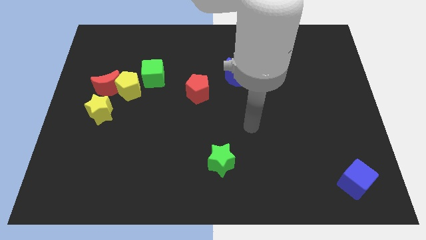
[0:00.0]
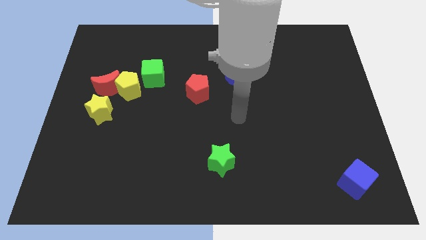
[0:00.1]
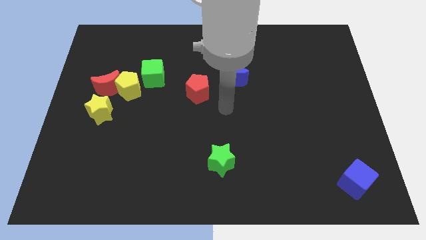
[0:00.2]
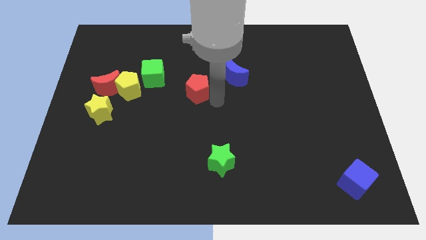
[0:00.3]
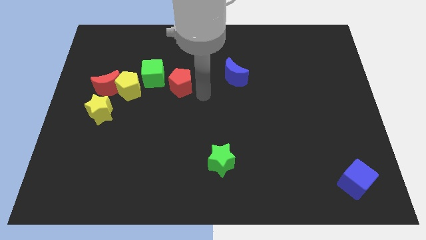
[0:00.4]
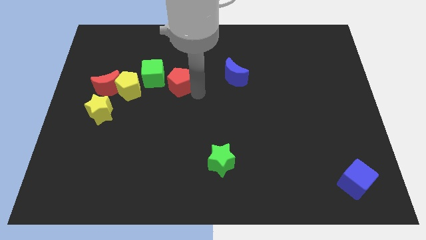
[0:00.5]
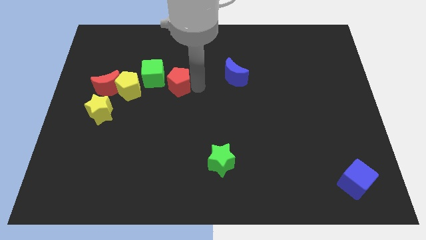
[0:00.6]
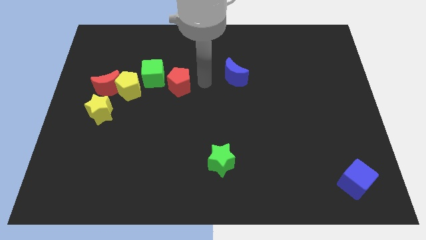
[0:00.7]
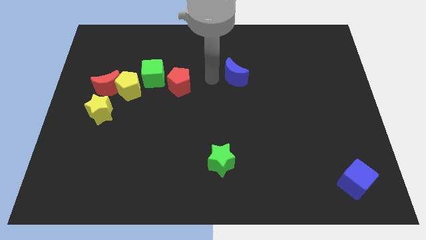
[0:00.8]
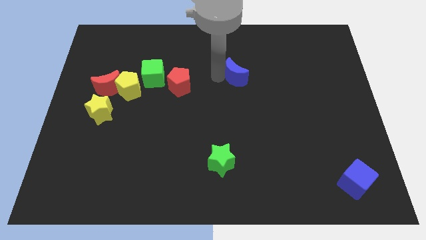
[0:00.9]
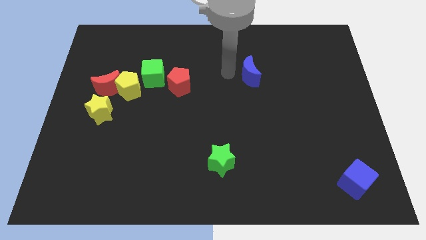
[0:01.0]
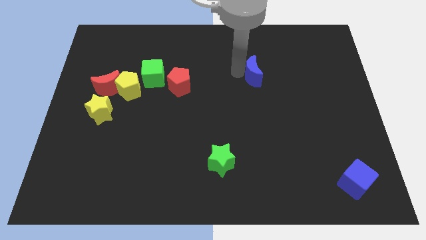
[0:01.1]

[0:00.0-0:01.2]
move red pentagon to the right of the green cube

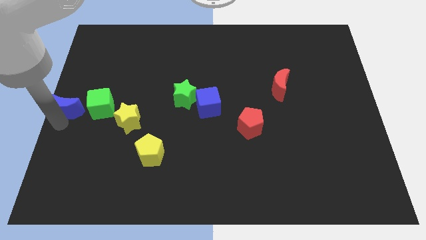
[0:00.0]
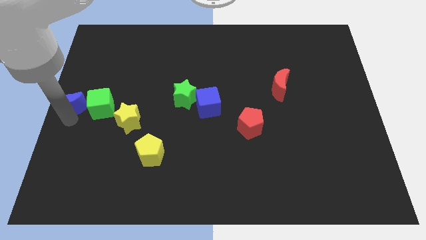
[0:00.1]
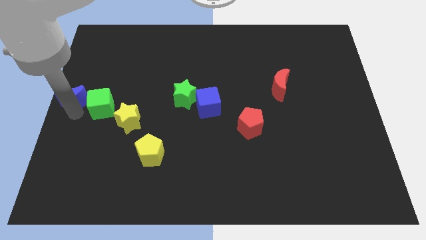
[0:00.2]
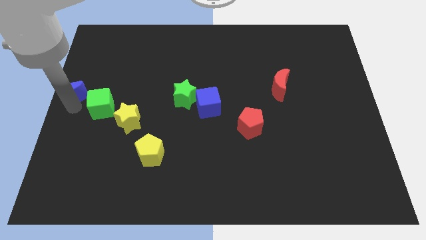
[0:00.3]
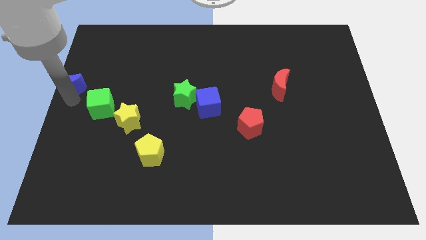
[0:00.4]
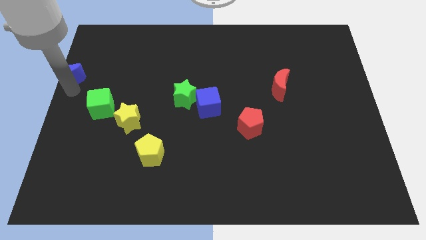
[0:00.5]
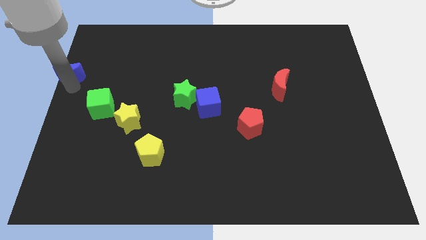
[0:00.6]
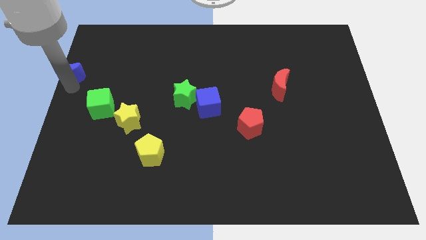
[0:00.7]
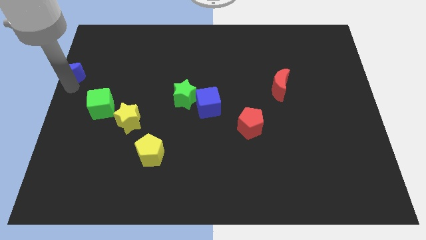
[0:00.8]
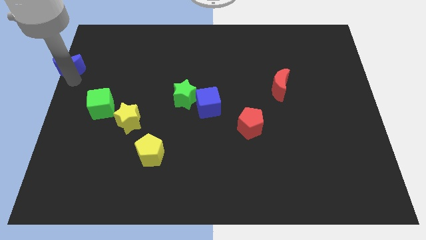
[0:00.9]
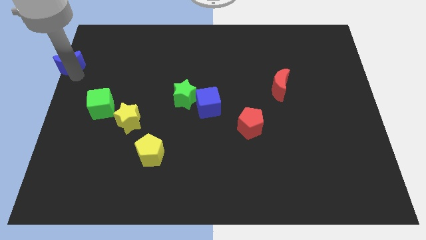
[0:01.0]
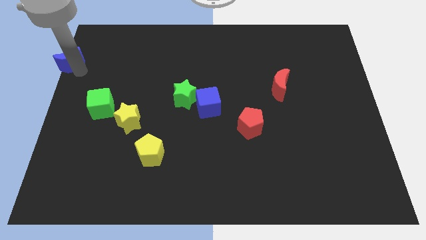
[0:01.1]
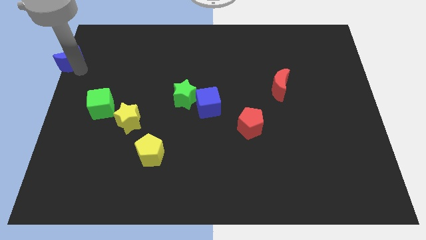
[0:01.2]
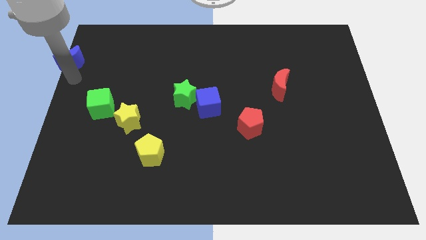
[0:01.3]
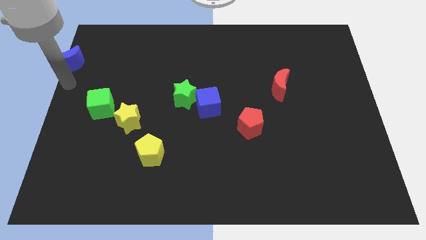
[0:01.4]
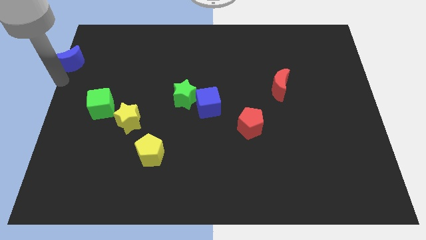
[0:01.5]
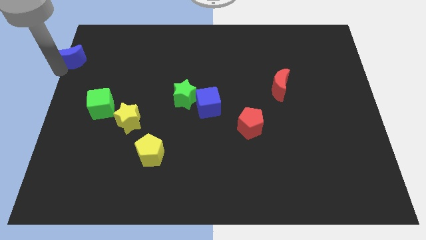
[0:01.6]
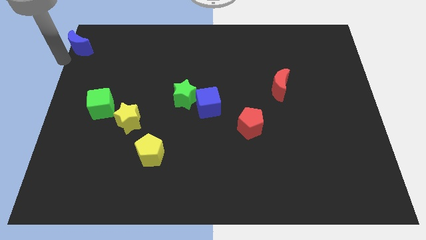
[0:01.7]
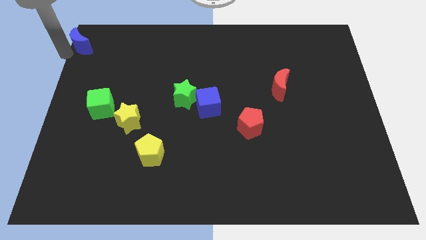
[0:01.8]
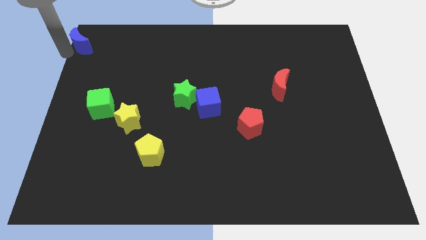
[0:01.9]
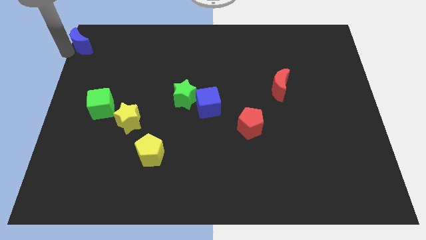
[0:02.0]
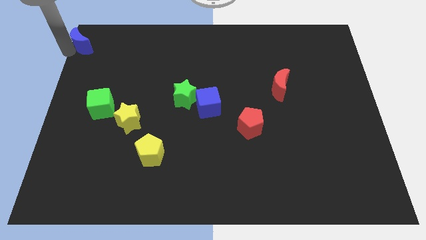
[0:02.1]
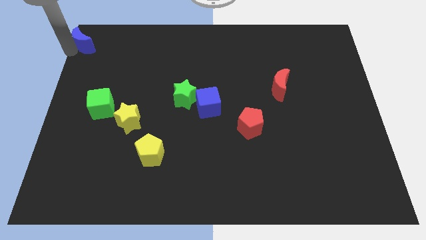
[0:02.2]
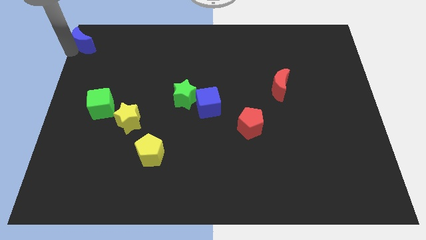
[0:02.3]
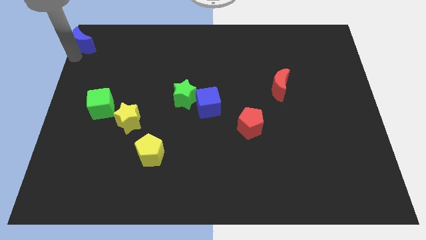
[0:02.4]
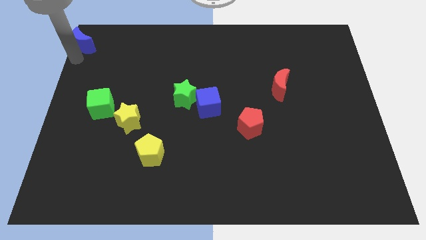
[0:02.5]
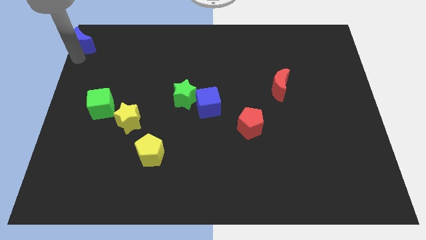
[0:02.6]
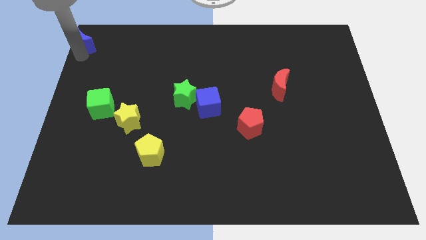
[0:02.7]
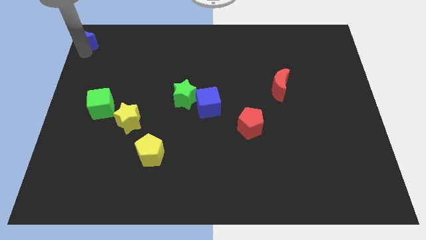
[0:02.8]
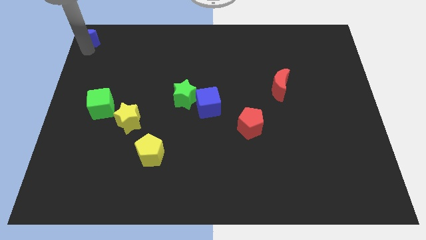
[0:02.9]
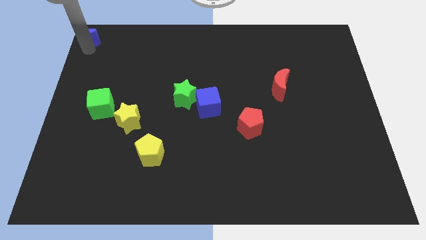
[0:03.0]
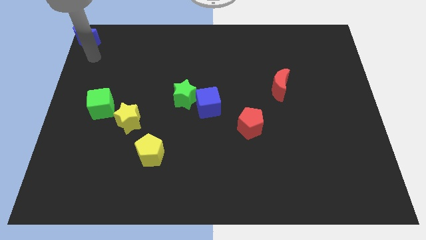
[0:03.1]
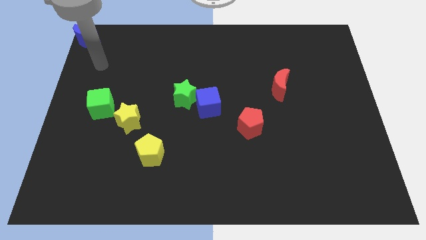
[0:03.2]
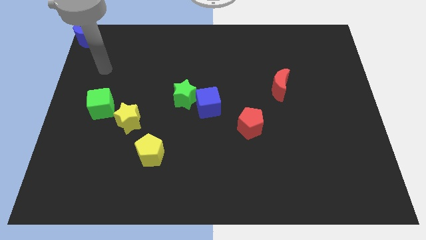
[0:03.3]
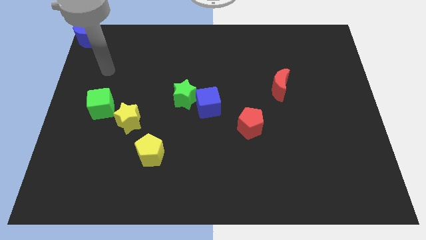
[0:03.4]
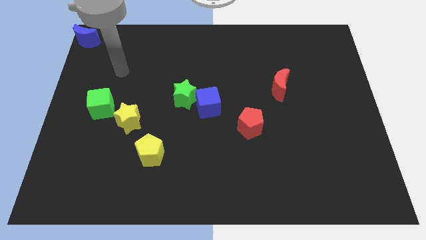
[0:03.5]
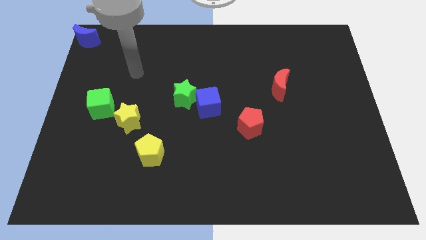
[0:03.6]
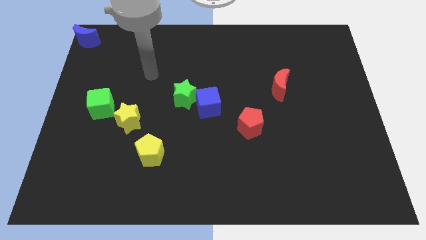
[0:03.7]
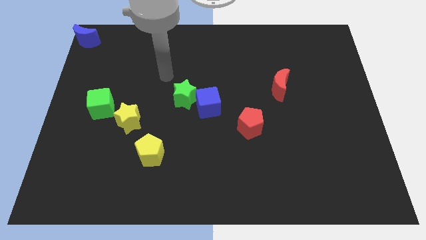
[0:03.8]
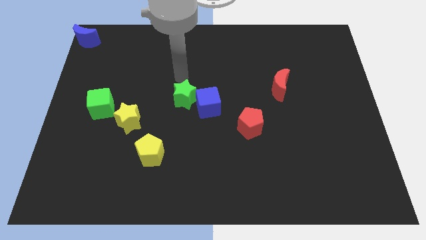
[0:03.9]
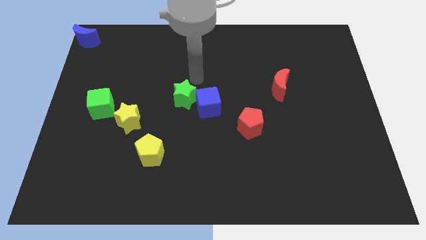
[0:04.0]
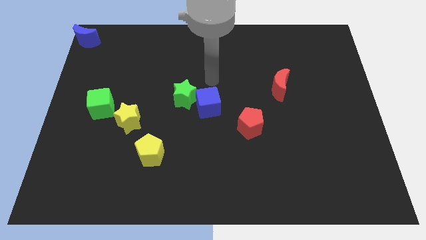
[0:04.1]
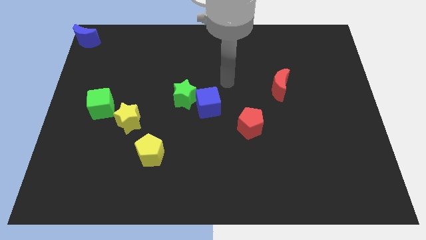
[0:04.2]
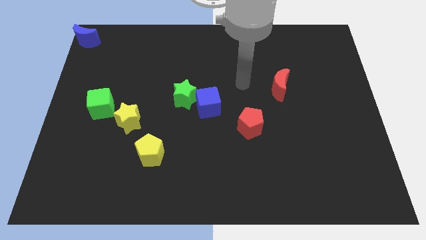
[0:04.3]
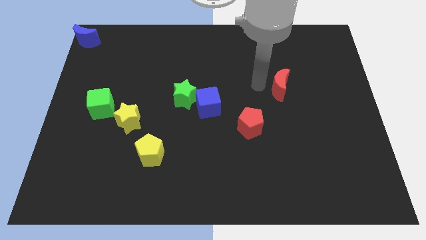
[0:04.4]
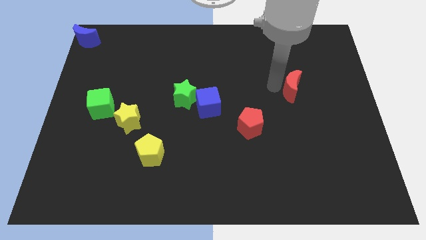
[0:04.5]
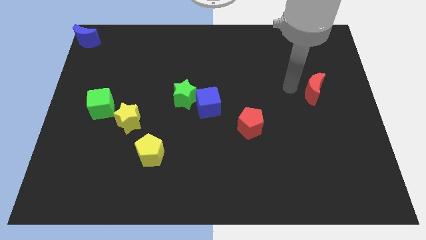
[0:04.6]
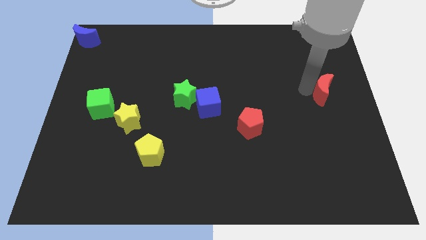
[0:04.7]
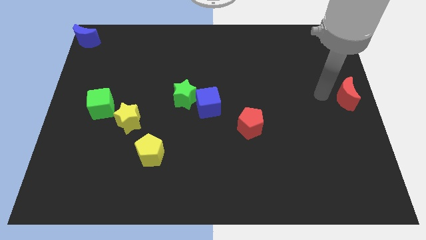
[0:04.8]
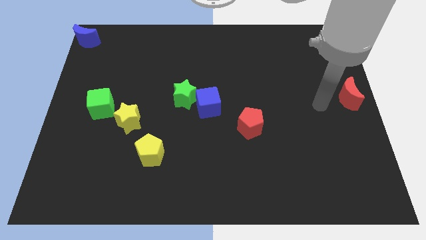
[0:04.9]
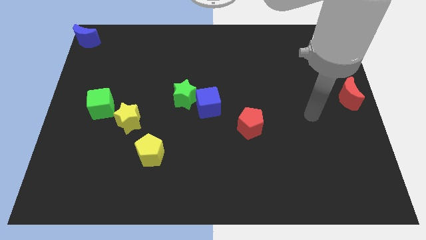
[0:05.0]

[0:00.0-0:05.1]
place the blue crescent at the left top corner

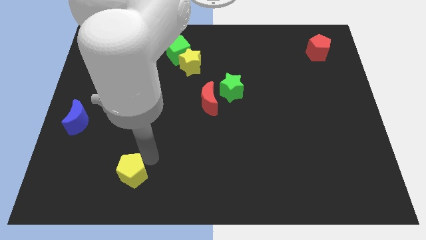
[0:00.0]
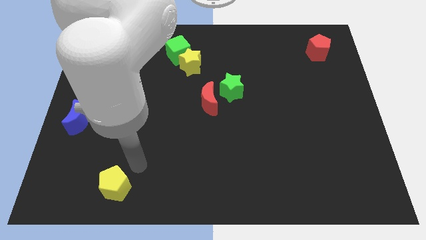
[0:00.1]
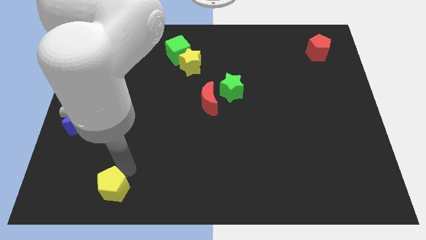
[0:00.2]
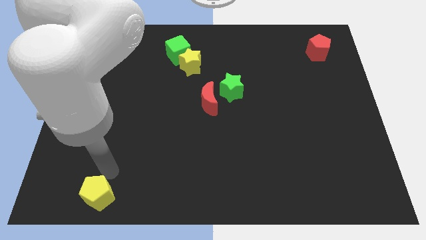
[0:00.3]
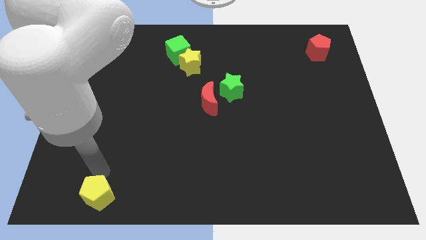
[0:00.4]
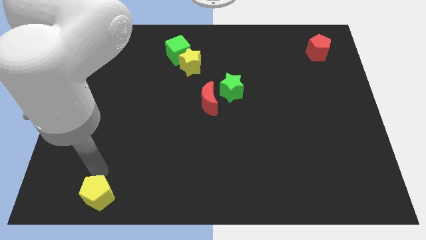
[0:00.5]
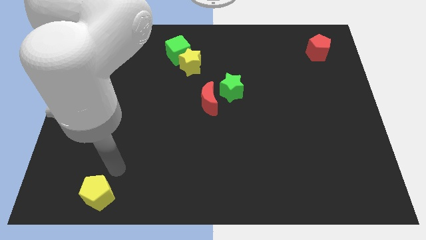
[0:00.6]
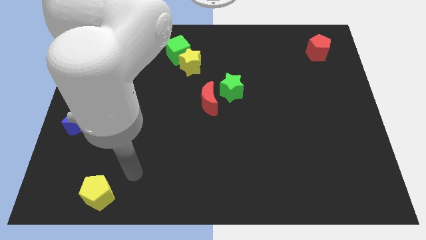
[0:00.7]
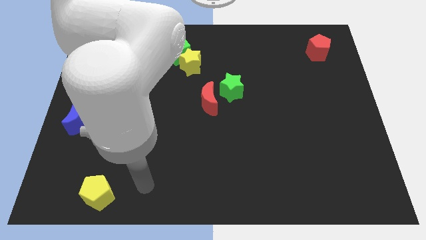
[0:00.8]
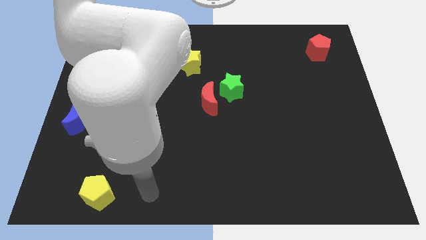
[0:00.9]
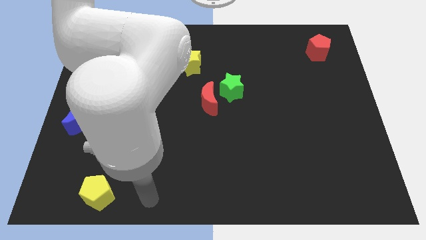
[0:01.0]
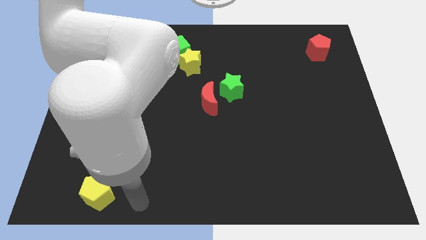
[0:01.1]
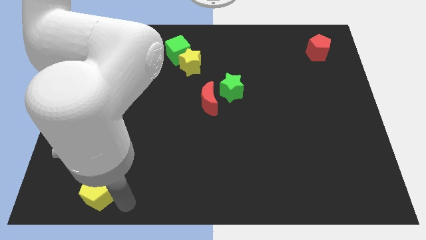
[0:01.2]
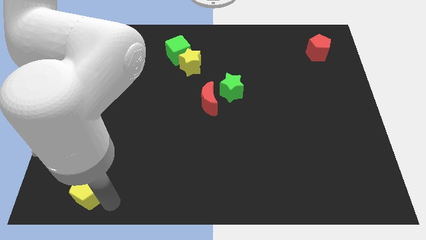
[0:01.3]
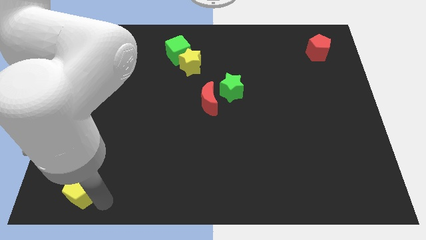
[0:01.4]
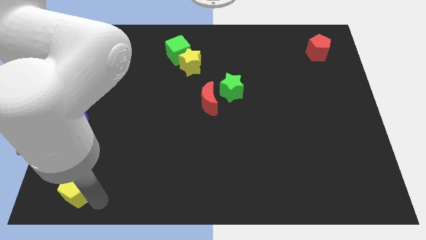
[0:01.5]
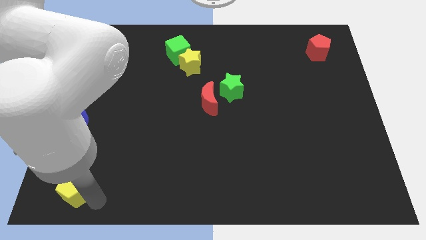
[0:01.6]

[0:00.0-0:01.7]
place the yellow pentagon vertically below the blue moon

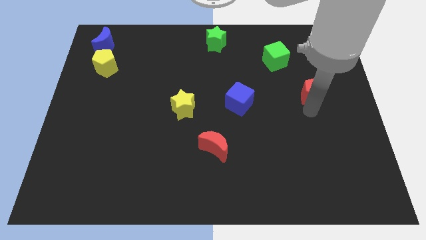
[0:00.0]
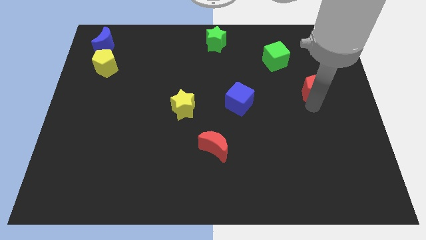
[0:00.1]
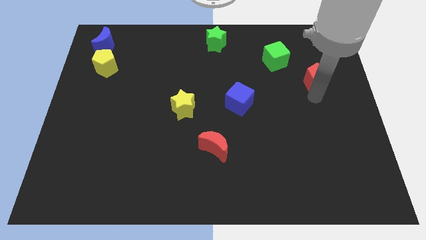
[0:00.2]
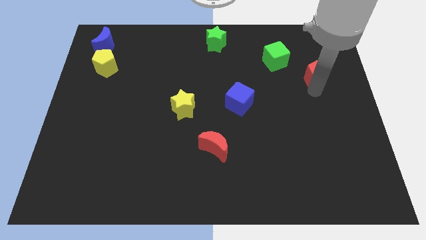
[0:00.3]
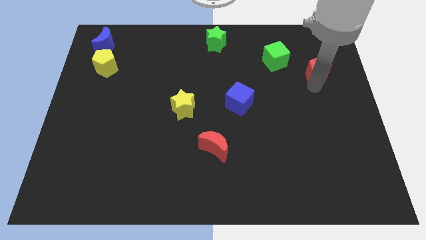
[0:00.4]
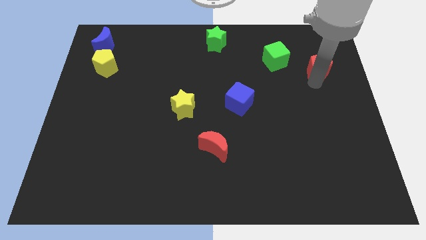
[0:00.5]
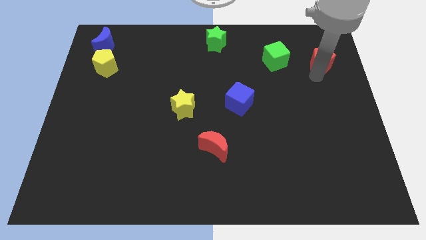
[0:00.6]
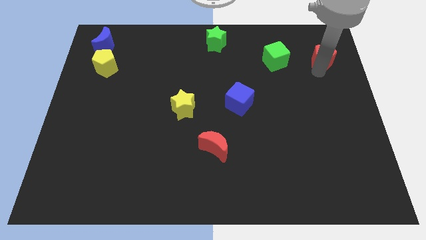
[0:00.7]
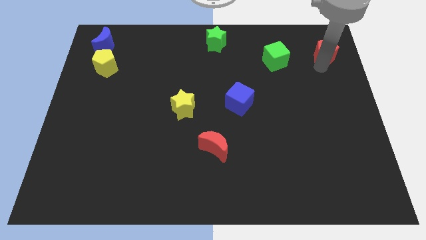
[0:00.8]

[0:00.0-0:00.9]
place the red pentagon to the right side of green cube

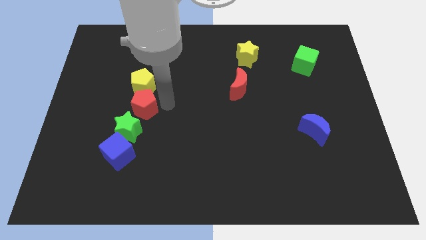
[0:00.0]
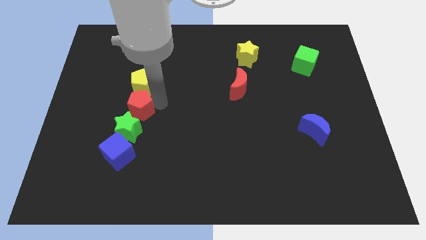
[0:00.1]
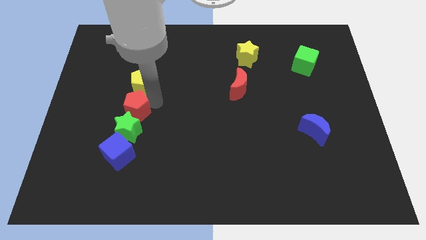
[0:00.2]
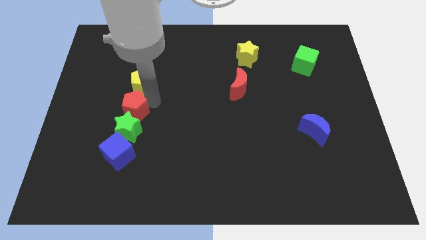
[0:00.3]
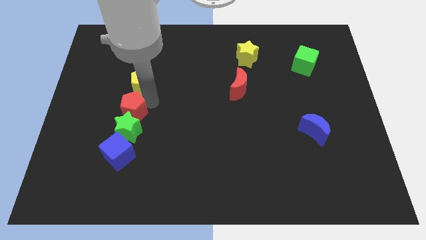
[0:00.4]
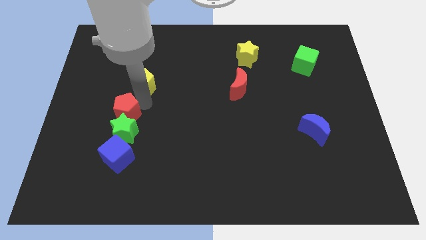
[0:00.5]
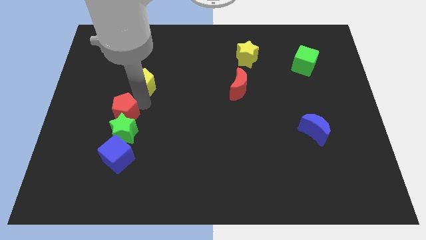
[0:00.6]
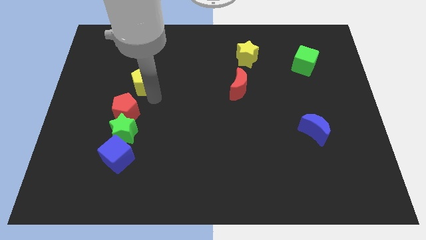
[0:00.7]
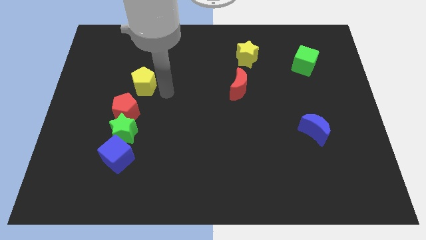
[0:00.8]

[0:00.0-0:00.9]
push the red pentagon slightly to the left
